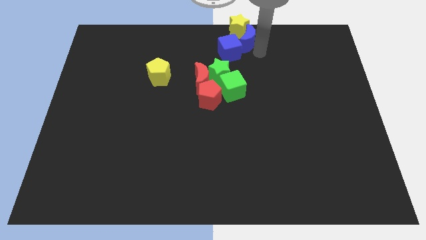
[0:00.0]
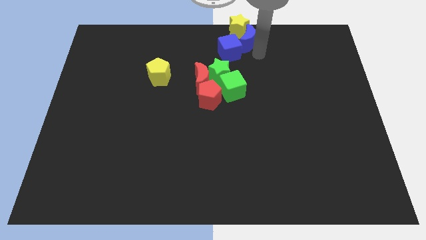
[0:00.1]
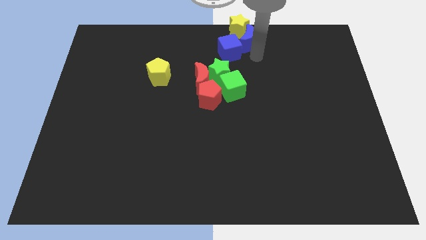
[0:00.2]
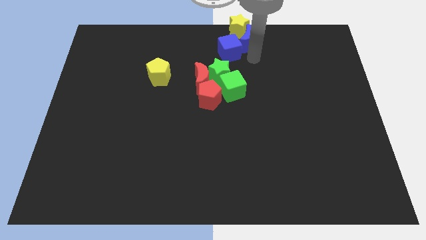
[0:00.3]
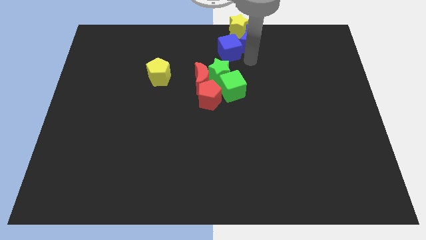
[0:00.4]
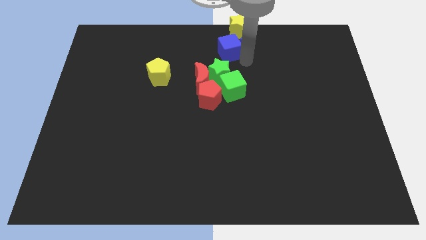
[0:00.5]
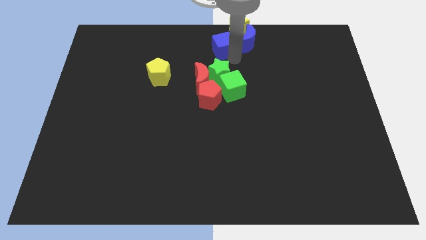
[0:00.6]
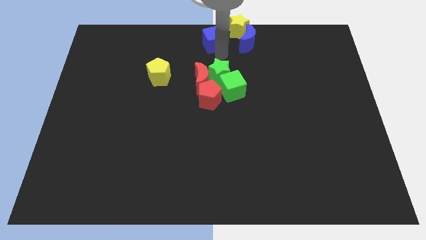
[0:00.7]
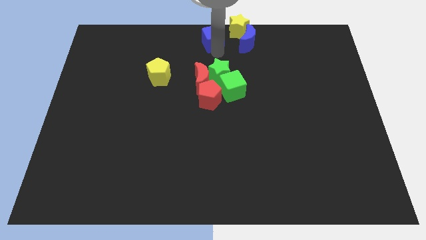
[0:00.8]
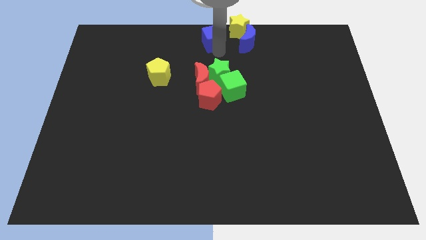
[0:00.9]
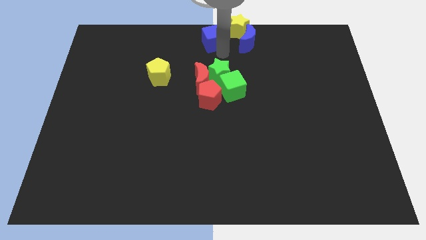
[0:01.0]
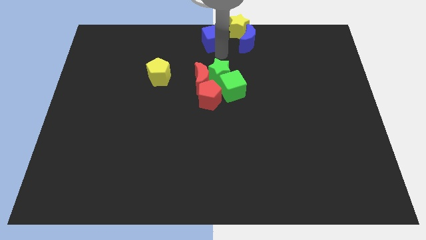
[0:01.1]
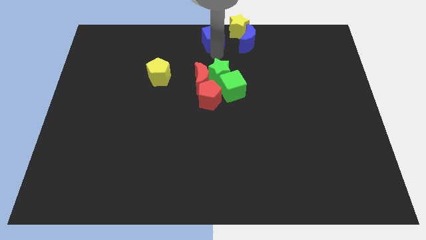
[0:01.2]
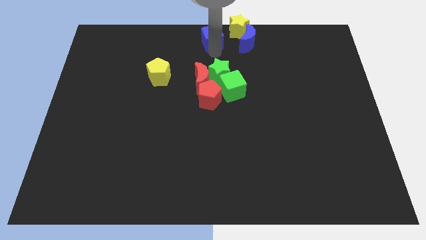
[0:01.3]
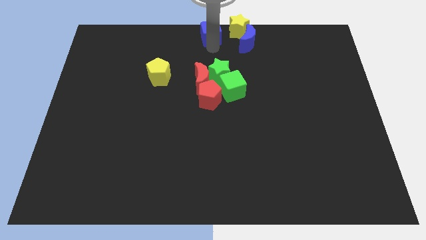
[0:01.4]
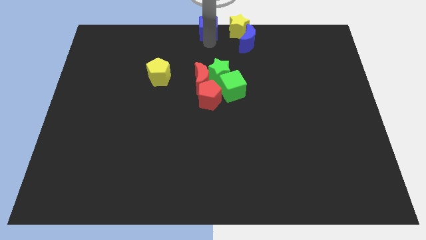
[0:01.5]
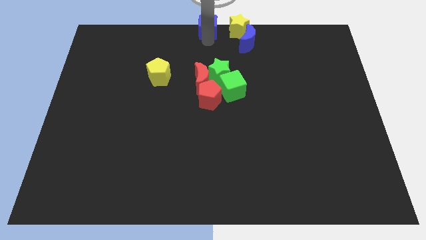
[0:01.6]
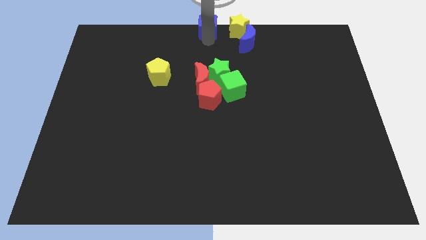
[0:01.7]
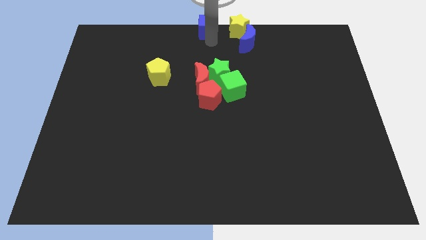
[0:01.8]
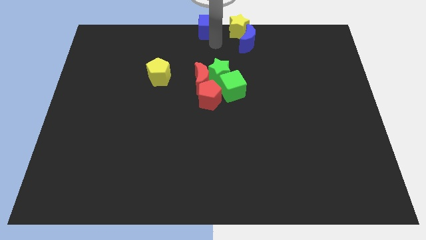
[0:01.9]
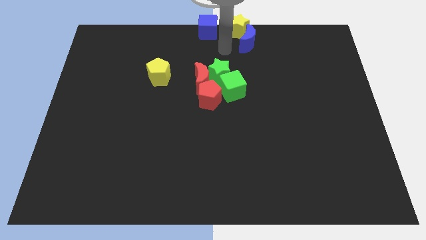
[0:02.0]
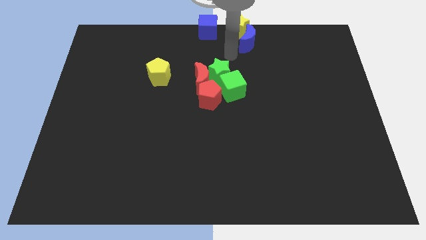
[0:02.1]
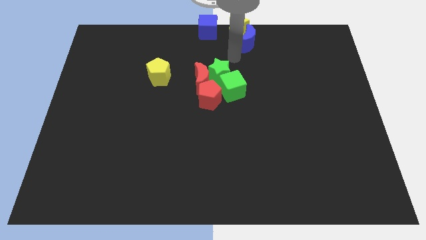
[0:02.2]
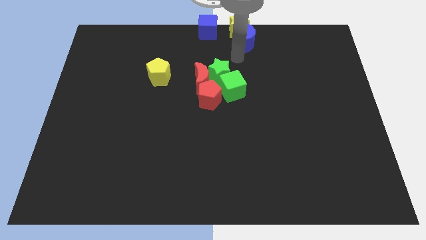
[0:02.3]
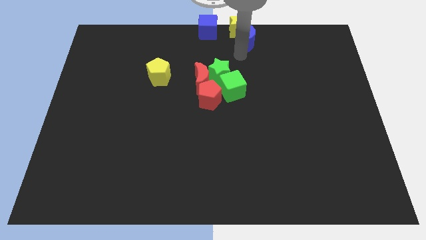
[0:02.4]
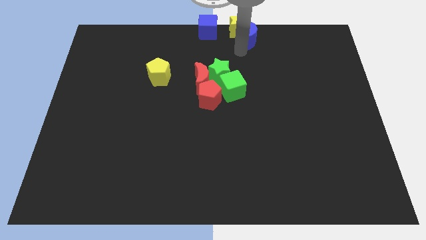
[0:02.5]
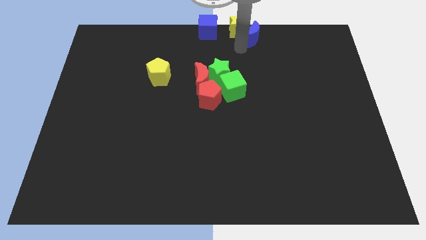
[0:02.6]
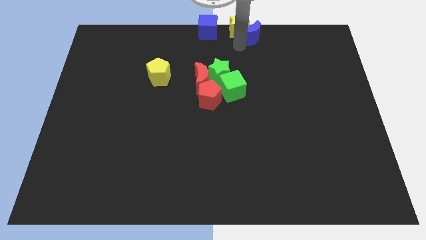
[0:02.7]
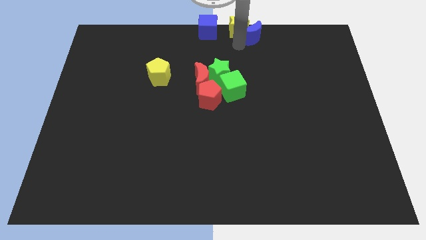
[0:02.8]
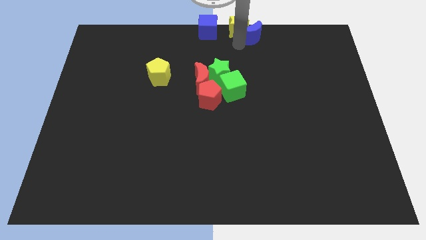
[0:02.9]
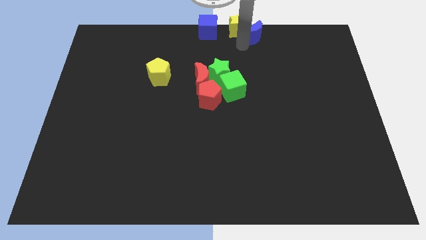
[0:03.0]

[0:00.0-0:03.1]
push the blue cube to the left of the yellow star

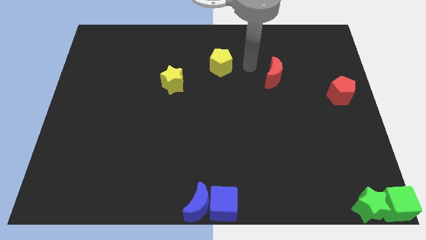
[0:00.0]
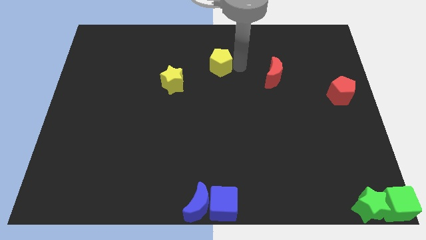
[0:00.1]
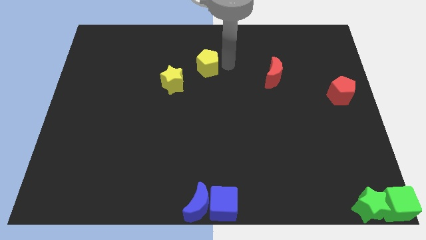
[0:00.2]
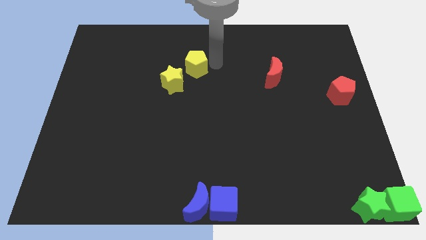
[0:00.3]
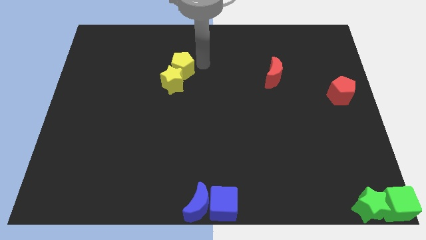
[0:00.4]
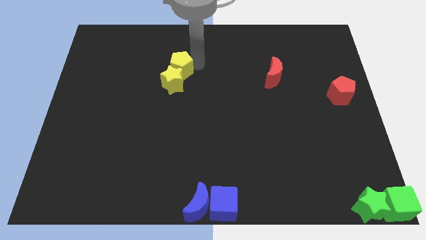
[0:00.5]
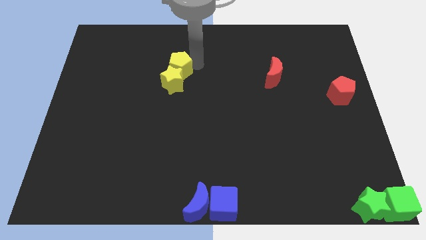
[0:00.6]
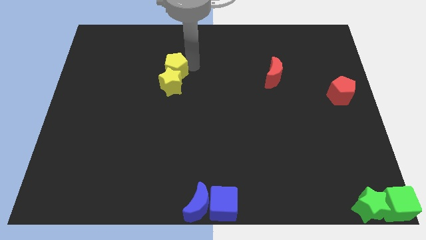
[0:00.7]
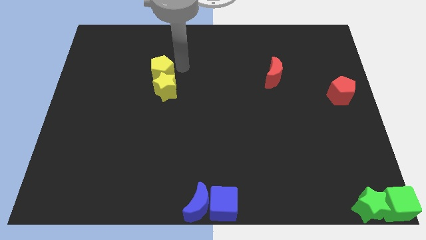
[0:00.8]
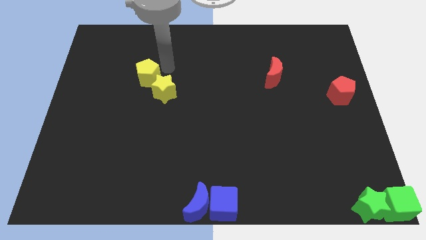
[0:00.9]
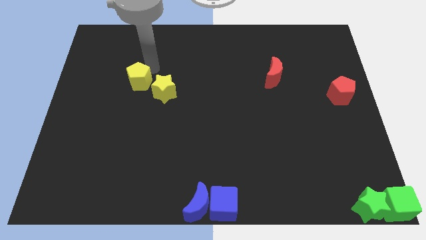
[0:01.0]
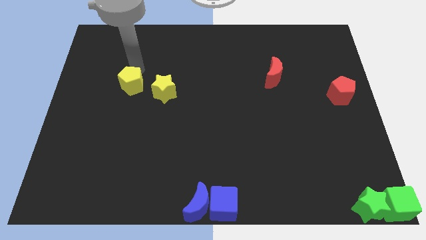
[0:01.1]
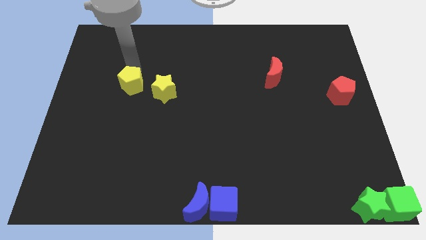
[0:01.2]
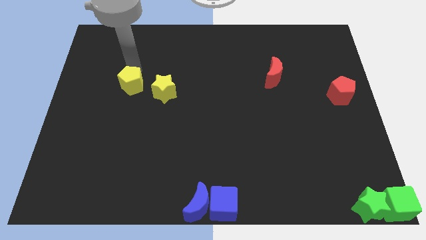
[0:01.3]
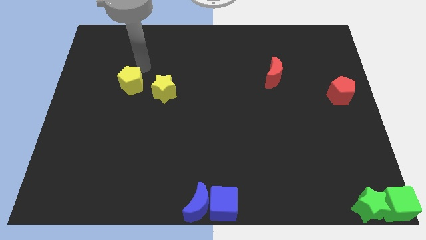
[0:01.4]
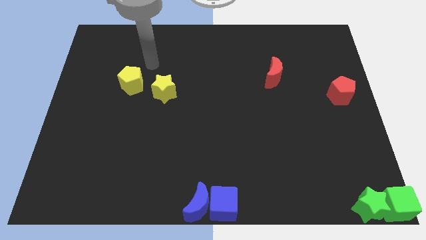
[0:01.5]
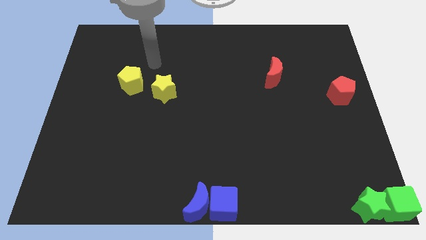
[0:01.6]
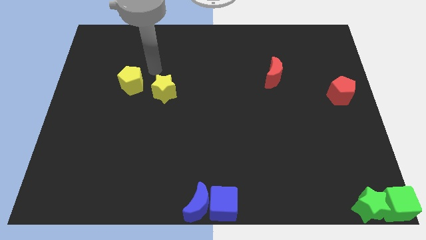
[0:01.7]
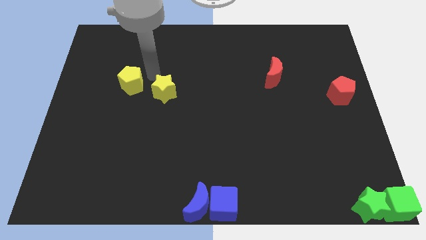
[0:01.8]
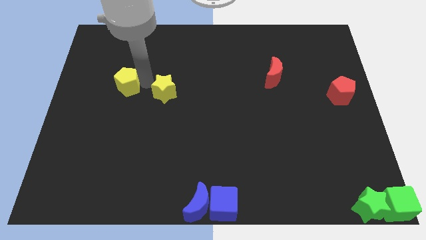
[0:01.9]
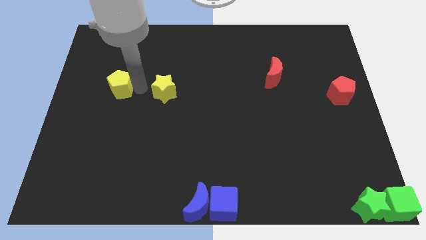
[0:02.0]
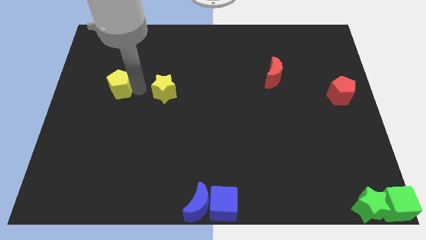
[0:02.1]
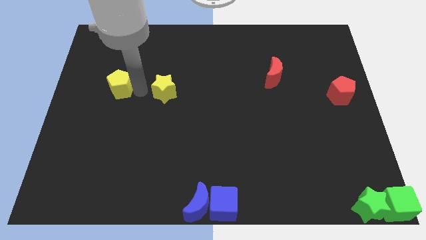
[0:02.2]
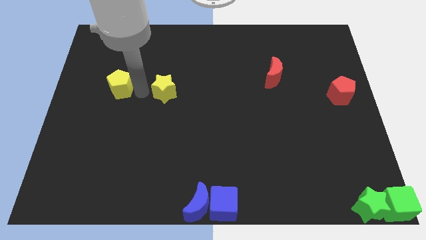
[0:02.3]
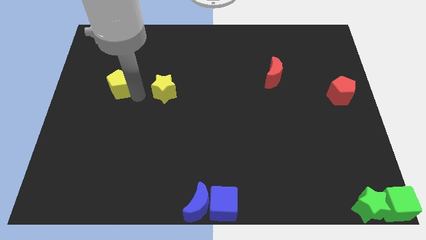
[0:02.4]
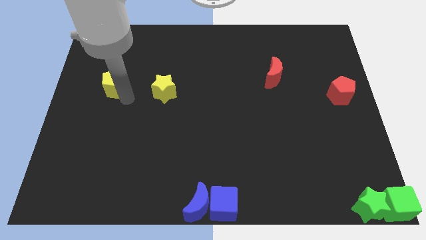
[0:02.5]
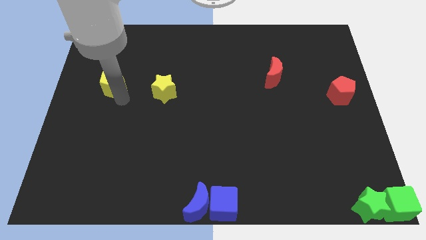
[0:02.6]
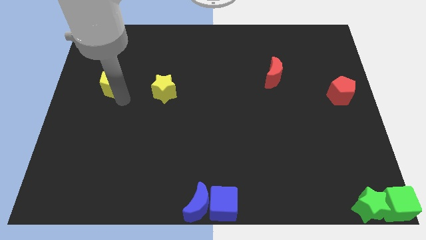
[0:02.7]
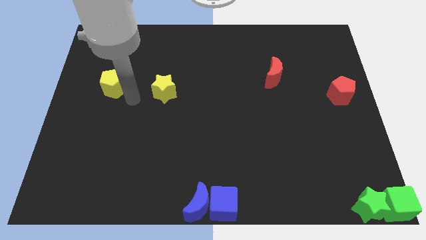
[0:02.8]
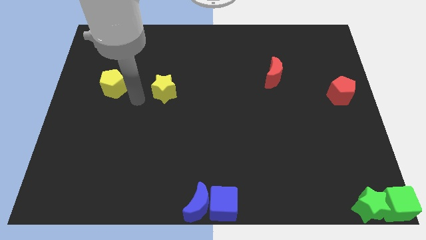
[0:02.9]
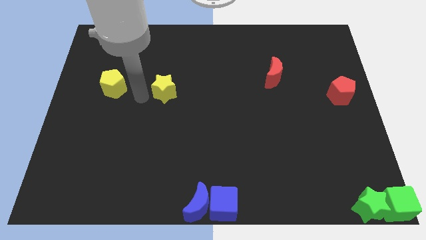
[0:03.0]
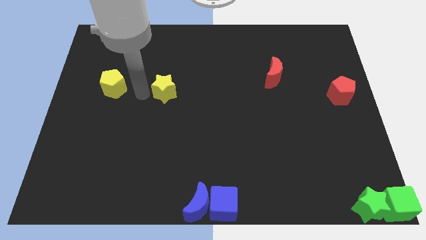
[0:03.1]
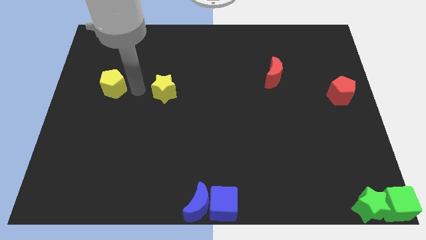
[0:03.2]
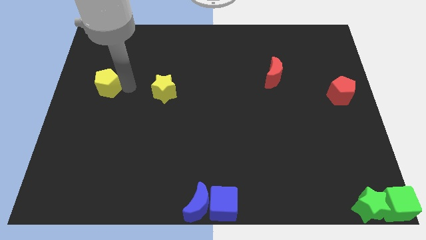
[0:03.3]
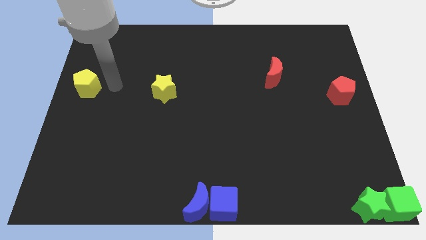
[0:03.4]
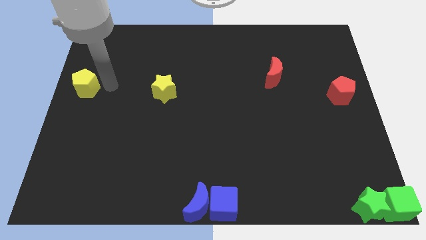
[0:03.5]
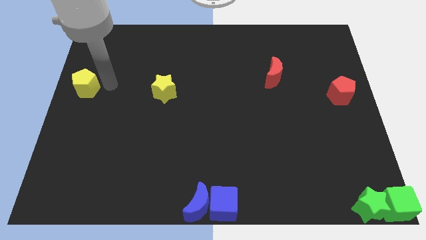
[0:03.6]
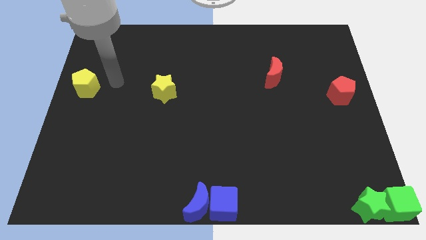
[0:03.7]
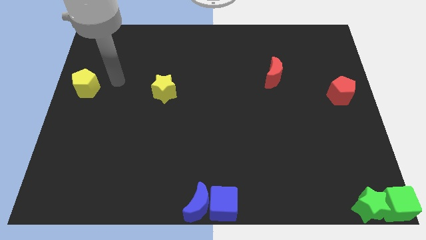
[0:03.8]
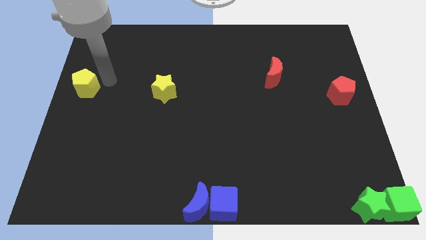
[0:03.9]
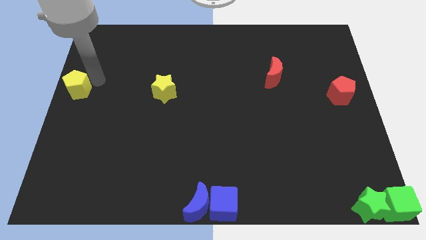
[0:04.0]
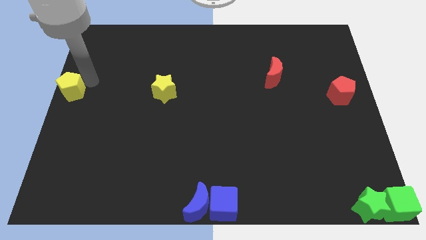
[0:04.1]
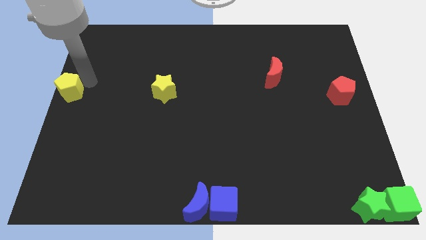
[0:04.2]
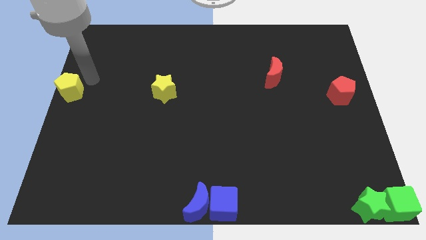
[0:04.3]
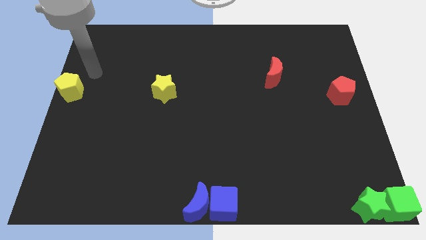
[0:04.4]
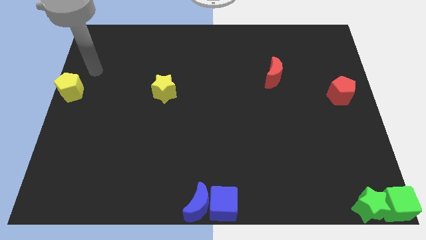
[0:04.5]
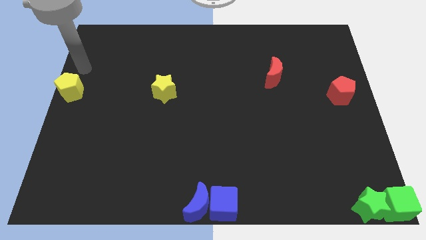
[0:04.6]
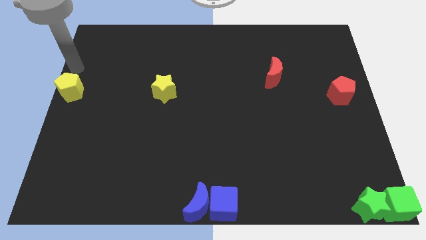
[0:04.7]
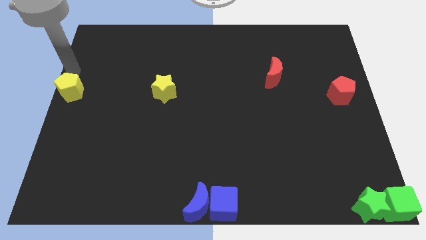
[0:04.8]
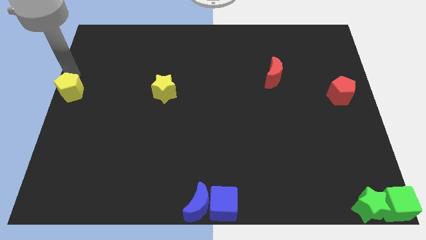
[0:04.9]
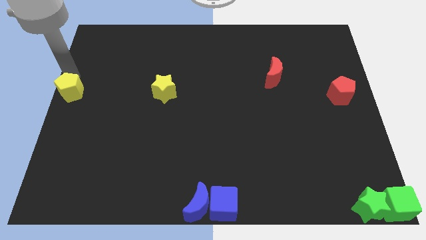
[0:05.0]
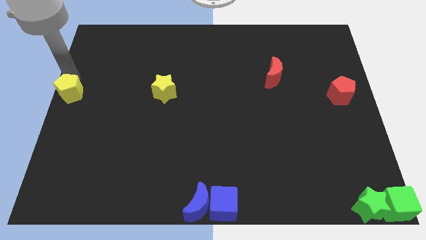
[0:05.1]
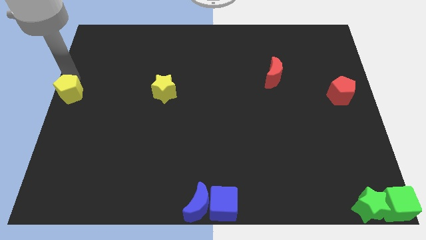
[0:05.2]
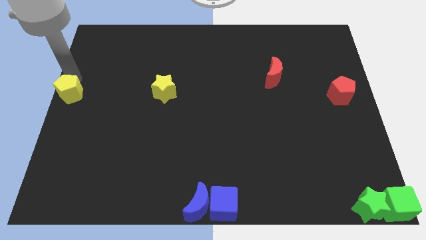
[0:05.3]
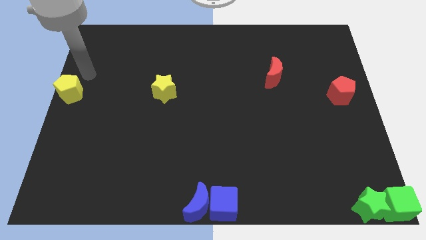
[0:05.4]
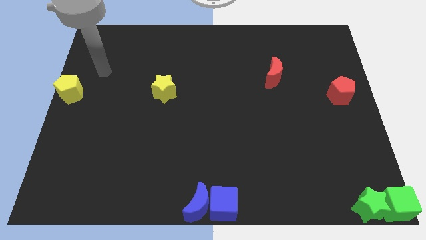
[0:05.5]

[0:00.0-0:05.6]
push the yellow pentagon to the center left of the board

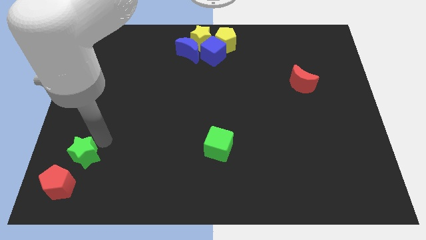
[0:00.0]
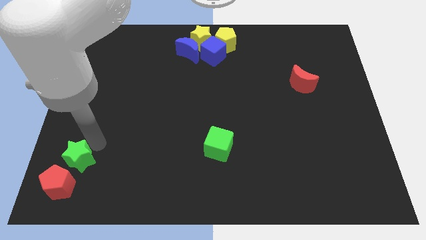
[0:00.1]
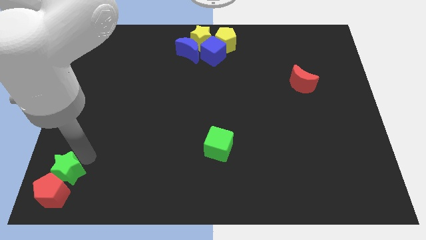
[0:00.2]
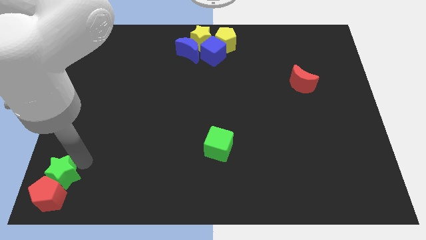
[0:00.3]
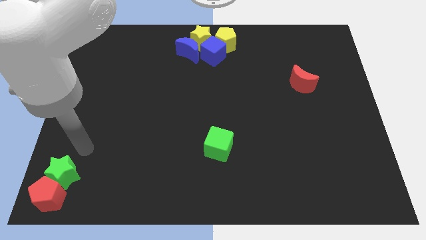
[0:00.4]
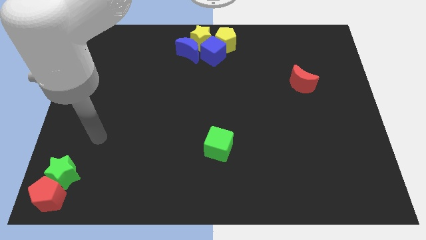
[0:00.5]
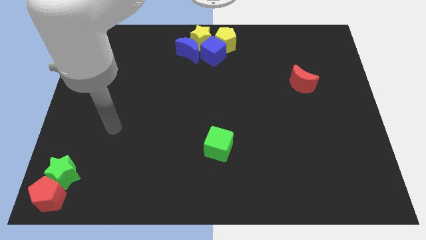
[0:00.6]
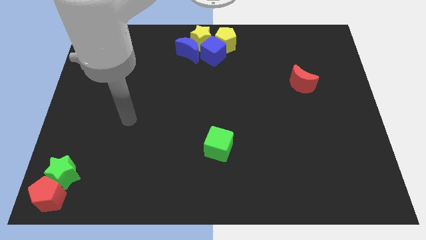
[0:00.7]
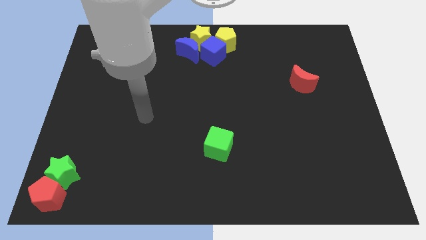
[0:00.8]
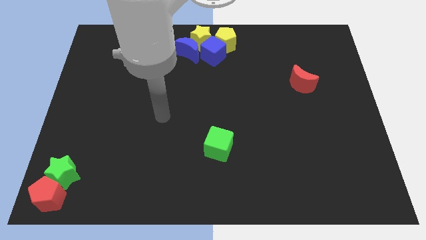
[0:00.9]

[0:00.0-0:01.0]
push the green star into the red pentagon
